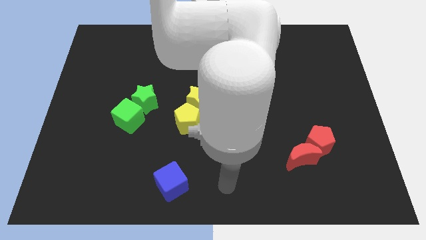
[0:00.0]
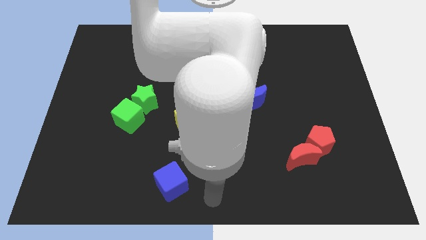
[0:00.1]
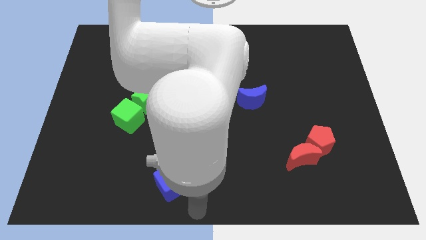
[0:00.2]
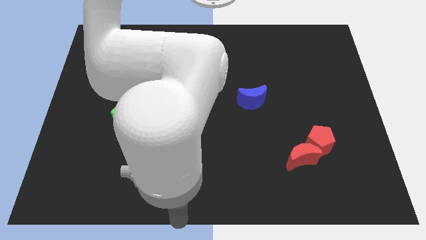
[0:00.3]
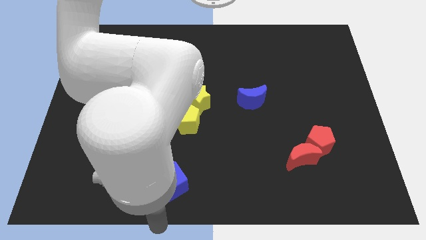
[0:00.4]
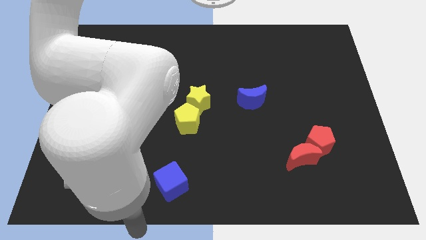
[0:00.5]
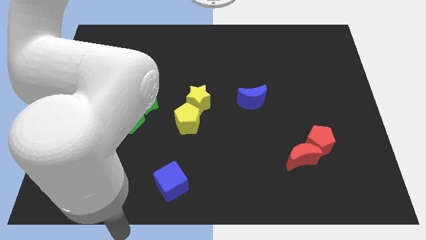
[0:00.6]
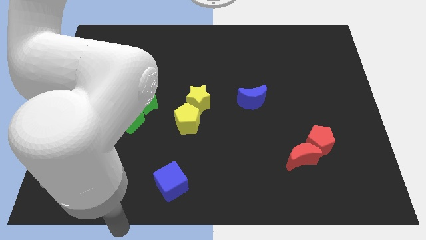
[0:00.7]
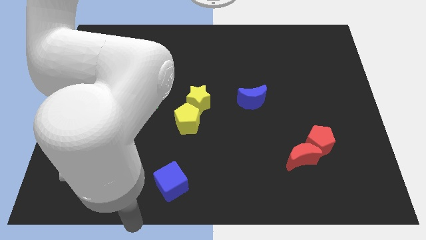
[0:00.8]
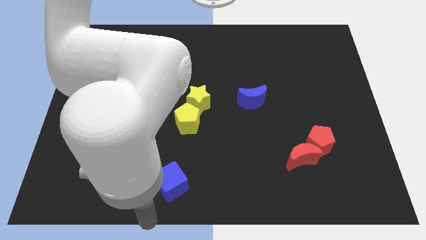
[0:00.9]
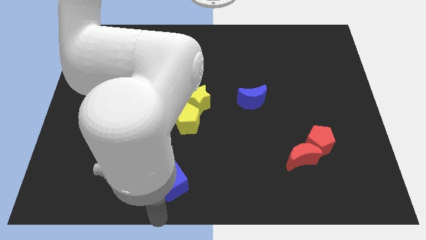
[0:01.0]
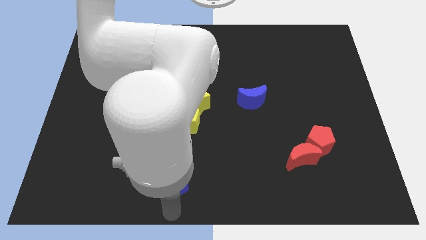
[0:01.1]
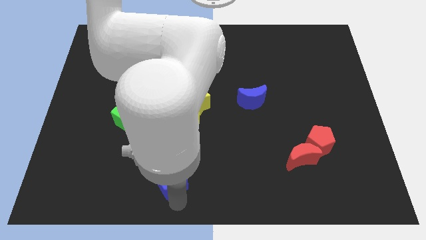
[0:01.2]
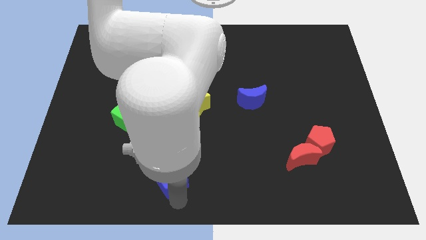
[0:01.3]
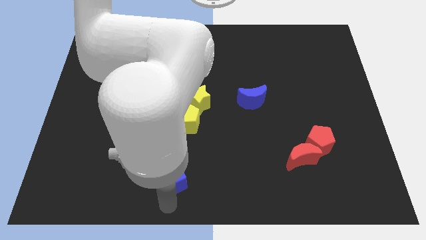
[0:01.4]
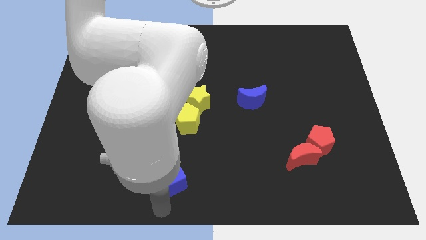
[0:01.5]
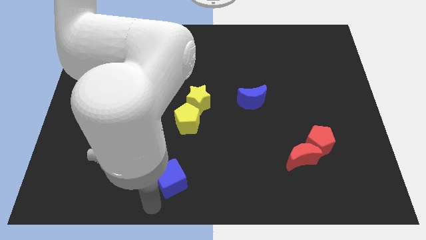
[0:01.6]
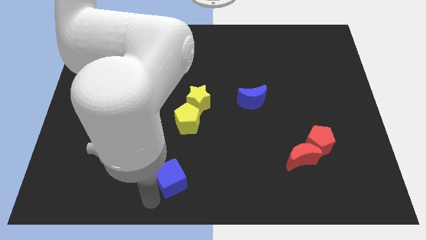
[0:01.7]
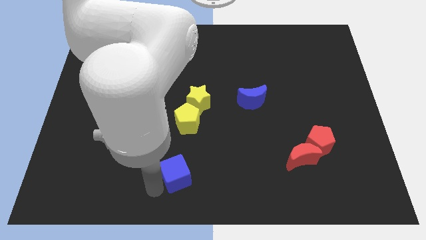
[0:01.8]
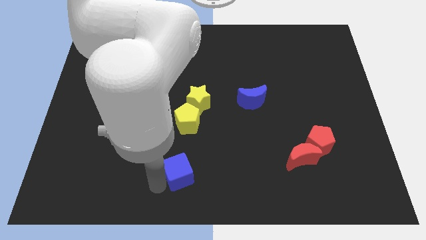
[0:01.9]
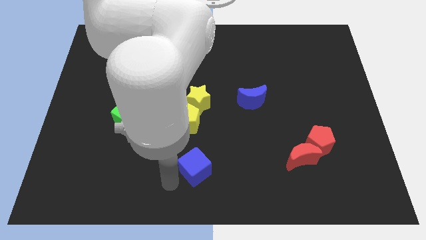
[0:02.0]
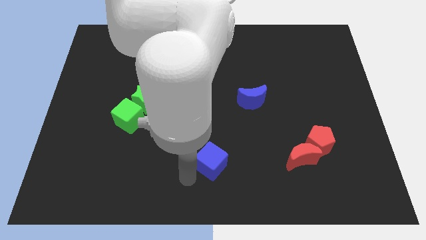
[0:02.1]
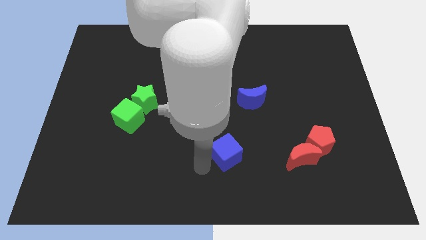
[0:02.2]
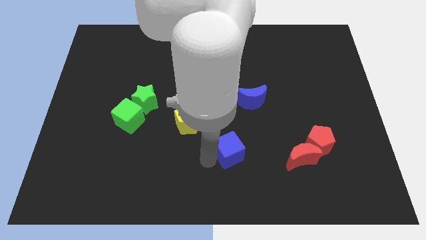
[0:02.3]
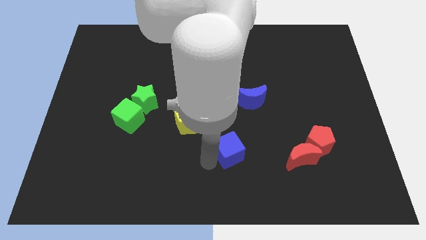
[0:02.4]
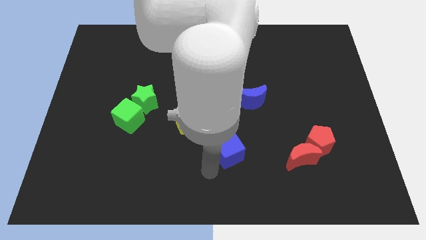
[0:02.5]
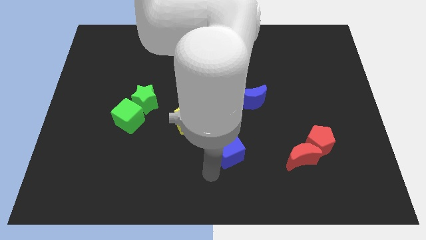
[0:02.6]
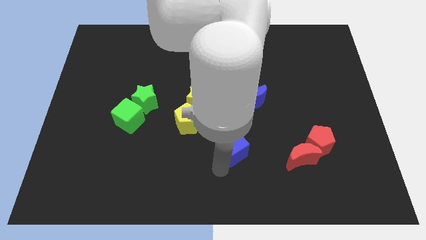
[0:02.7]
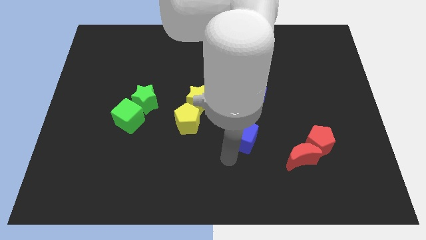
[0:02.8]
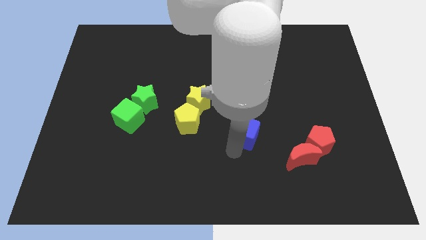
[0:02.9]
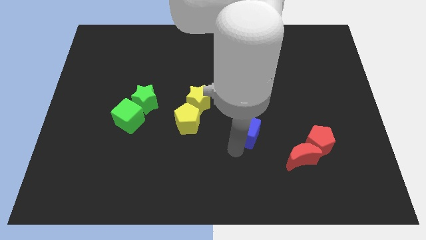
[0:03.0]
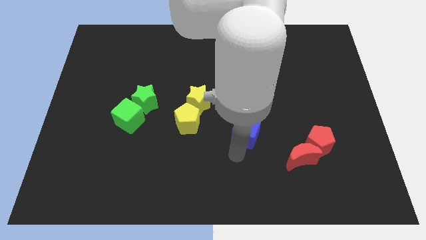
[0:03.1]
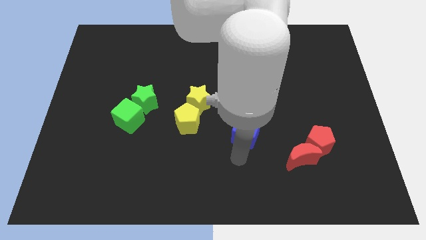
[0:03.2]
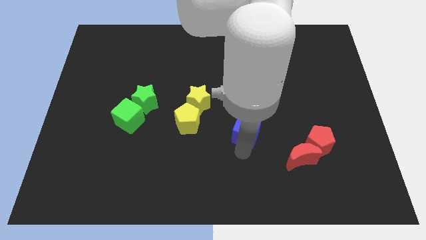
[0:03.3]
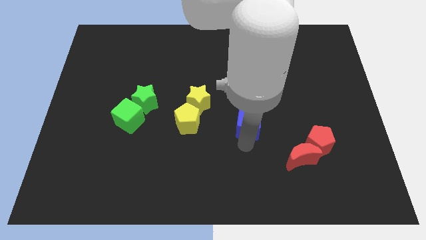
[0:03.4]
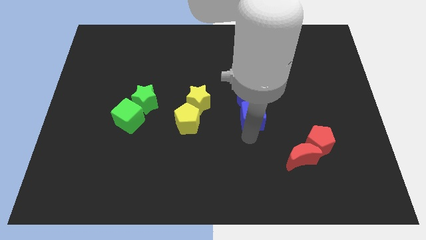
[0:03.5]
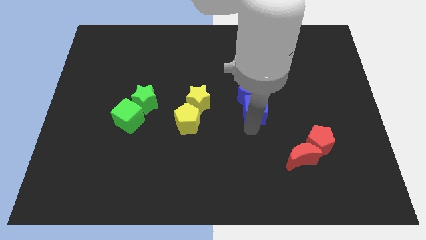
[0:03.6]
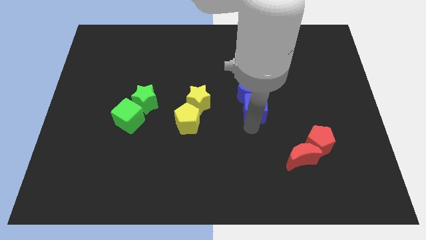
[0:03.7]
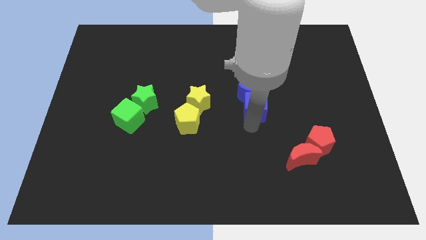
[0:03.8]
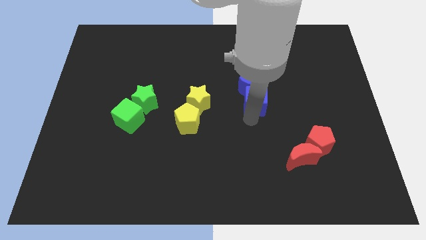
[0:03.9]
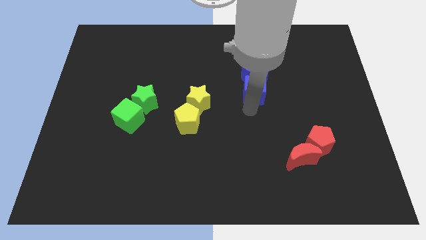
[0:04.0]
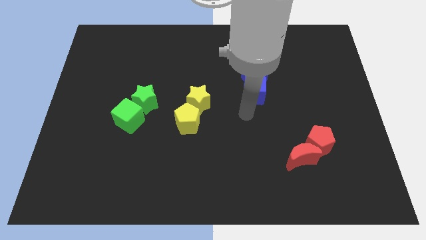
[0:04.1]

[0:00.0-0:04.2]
move the blue cube into the blue moon

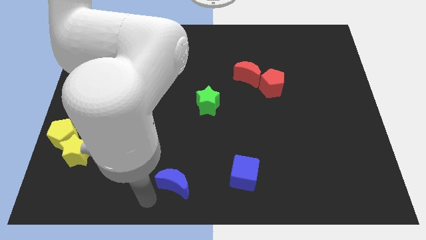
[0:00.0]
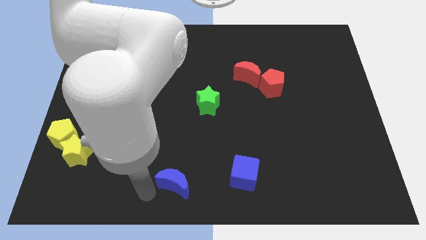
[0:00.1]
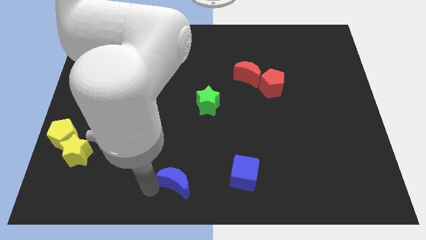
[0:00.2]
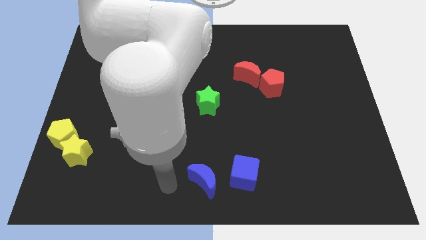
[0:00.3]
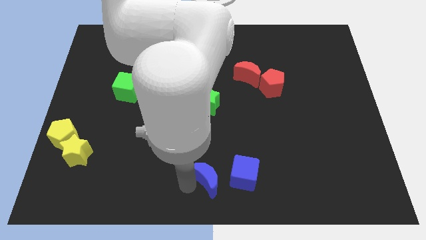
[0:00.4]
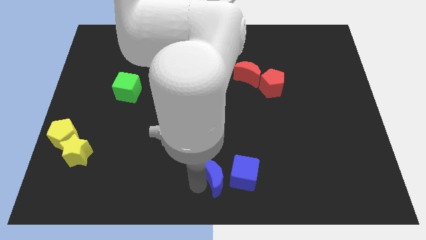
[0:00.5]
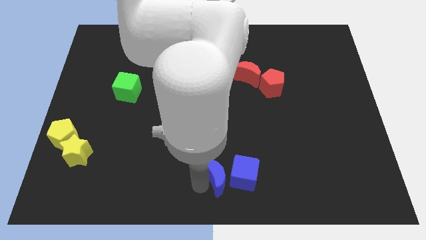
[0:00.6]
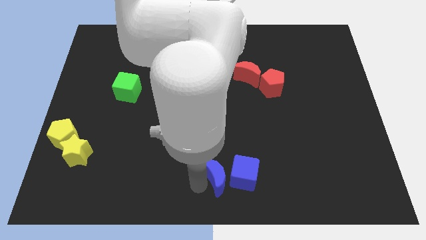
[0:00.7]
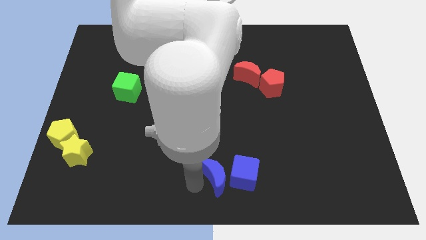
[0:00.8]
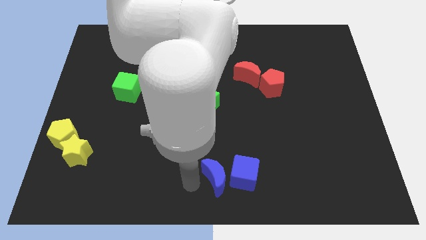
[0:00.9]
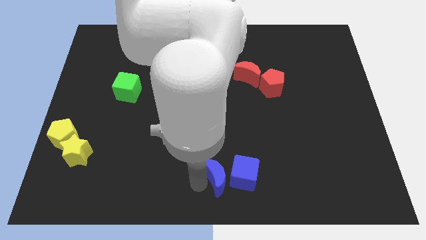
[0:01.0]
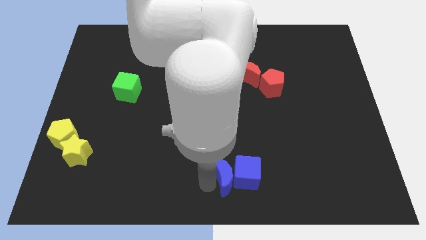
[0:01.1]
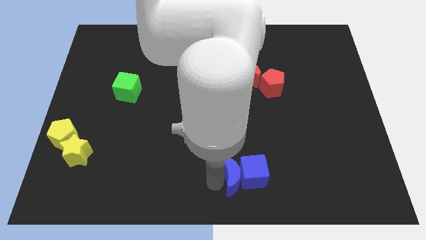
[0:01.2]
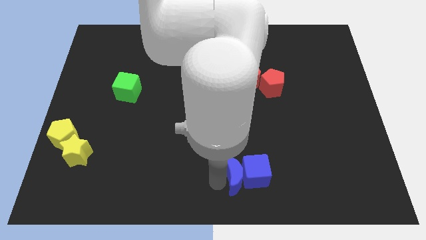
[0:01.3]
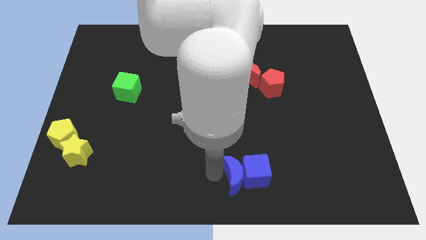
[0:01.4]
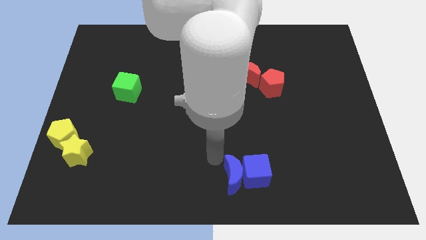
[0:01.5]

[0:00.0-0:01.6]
push the blue crescent into the blue cube

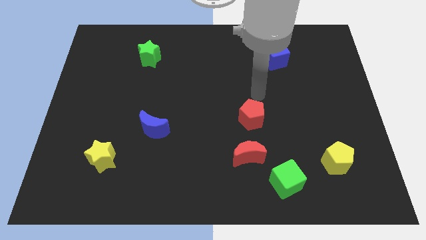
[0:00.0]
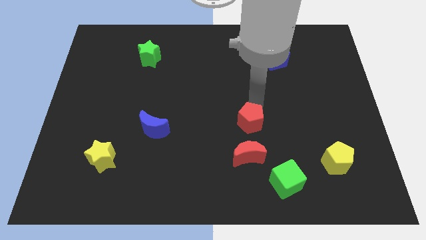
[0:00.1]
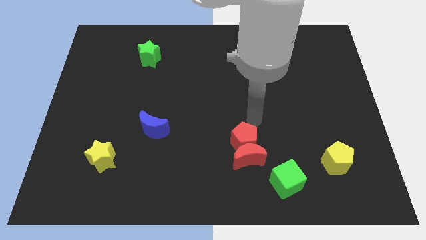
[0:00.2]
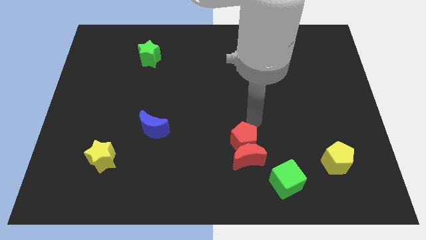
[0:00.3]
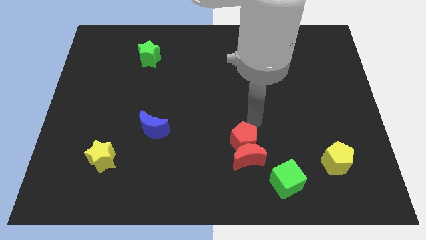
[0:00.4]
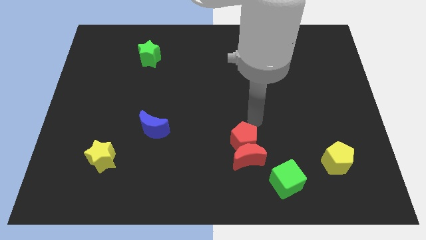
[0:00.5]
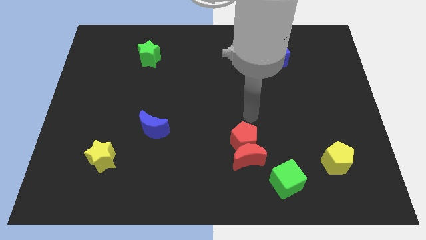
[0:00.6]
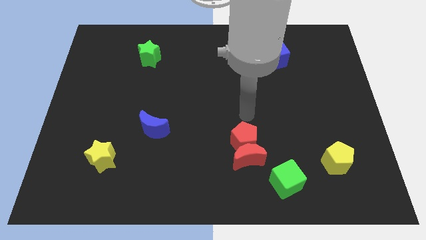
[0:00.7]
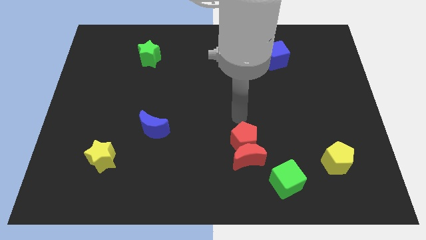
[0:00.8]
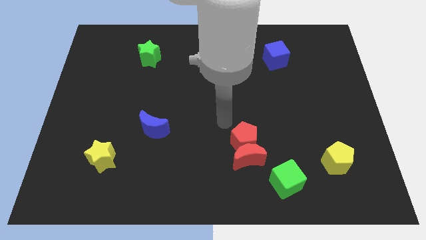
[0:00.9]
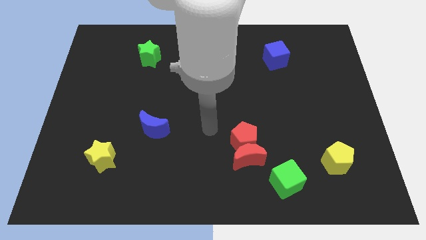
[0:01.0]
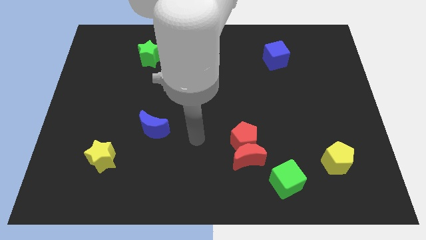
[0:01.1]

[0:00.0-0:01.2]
place the red pentagon on top of the red crescent

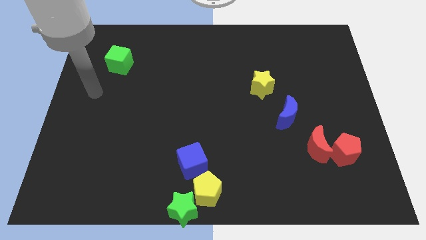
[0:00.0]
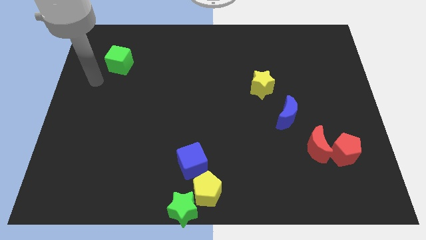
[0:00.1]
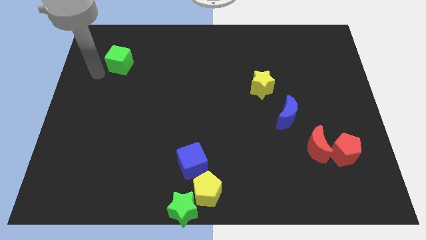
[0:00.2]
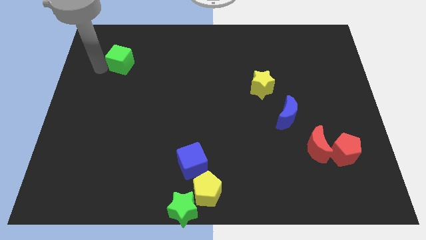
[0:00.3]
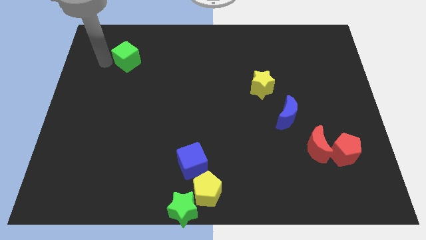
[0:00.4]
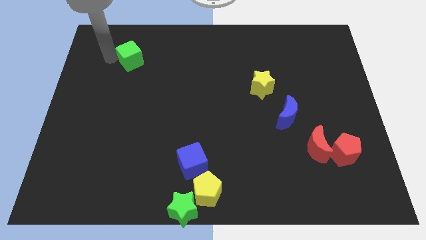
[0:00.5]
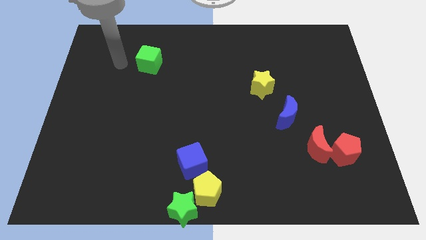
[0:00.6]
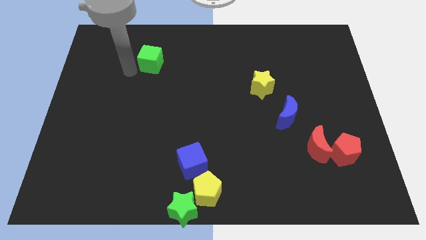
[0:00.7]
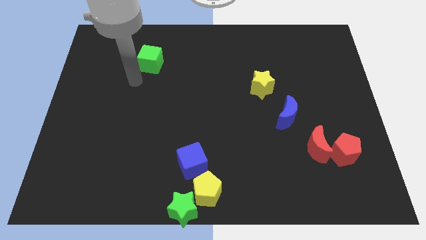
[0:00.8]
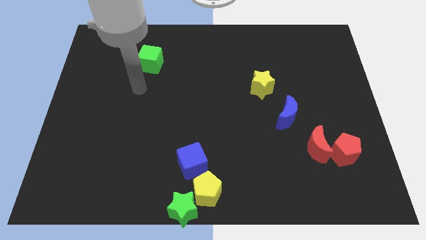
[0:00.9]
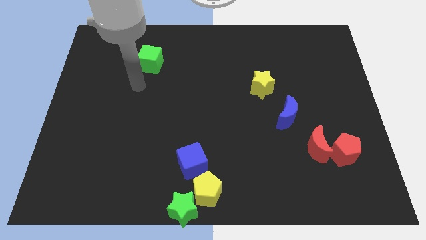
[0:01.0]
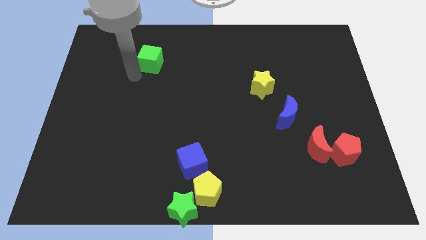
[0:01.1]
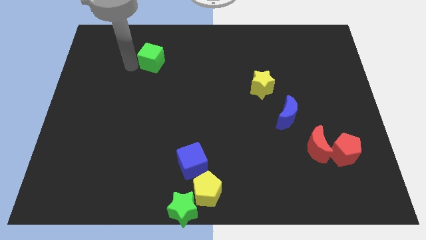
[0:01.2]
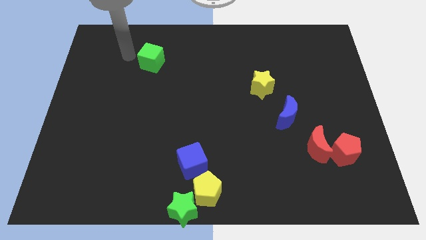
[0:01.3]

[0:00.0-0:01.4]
slightly move the green cube towards the right

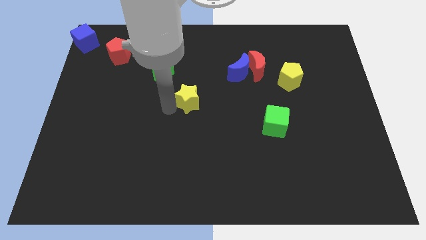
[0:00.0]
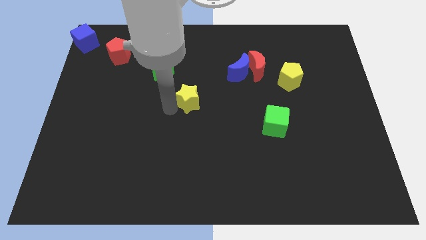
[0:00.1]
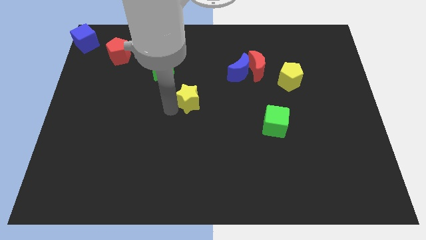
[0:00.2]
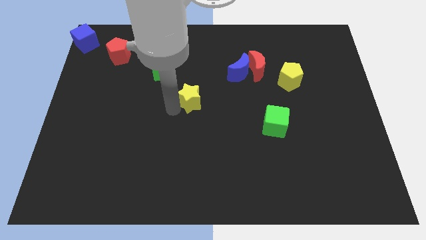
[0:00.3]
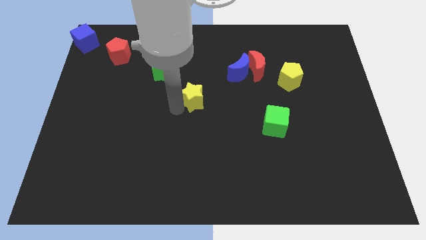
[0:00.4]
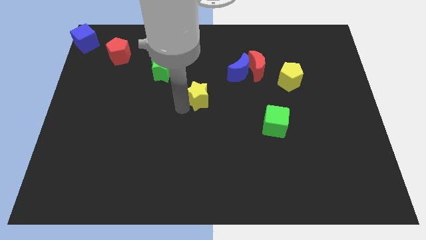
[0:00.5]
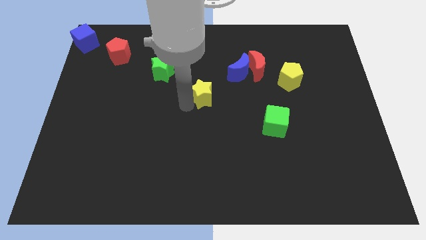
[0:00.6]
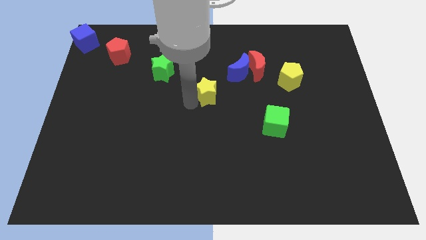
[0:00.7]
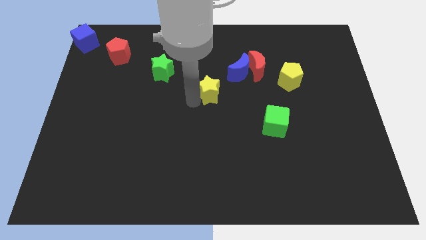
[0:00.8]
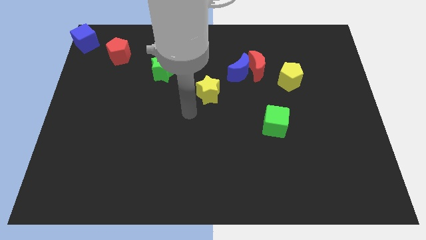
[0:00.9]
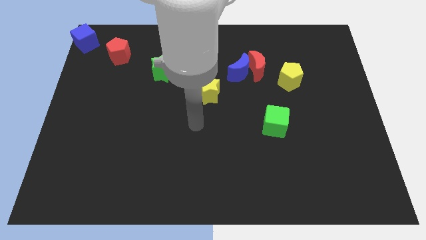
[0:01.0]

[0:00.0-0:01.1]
move the yellow star towards the blue crescent
